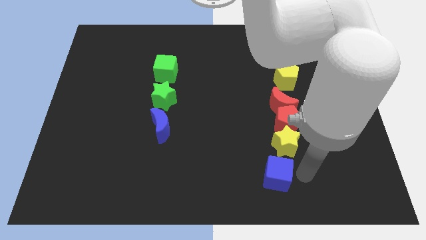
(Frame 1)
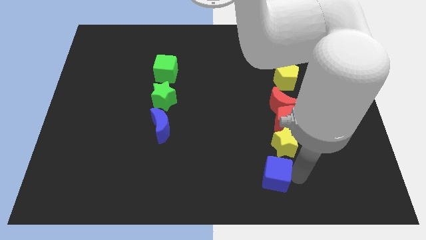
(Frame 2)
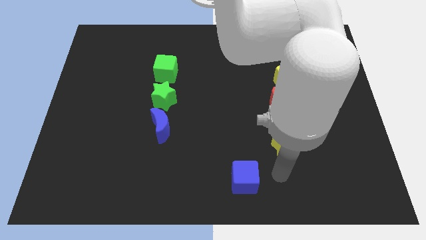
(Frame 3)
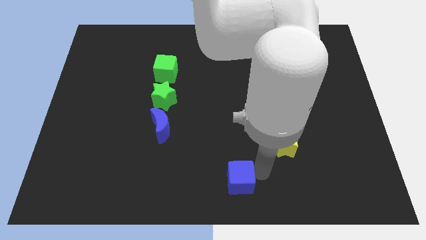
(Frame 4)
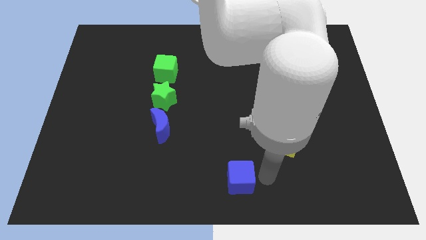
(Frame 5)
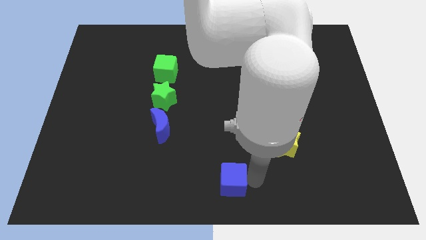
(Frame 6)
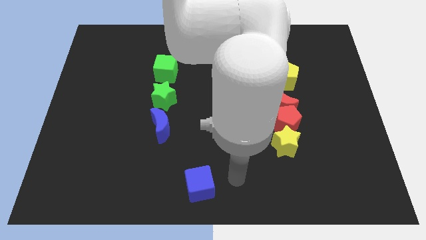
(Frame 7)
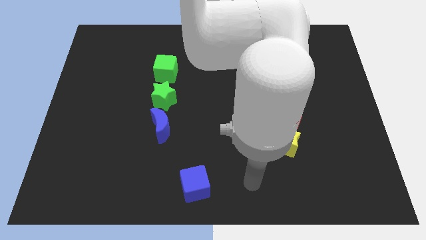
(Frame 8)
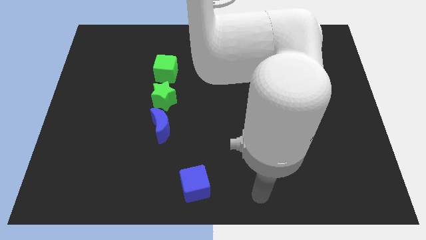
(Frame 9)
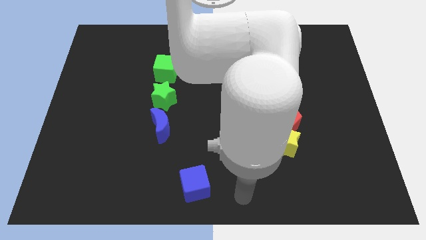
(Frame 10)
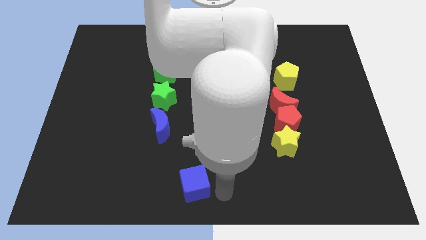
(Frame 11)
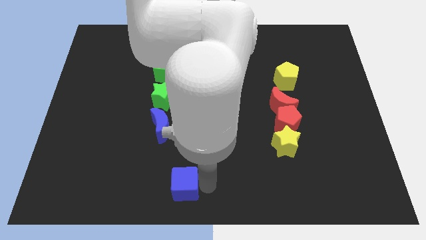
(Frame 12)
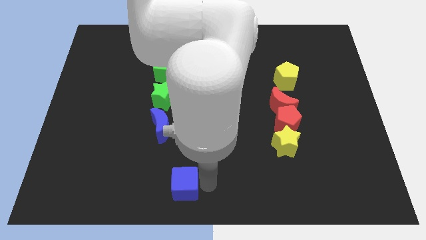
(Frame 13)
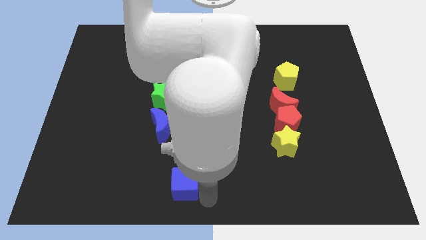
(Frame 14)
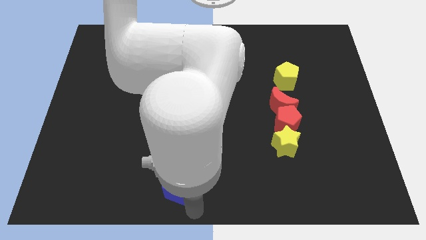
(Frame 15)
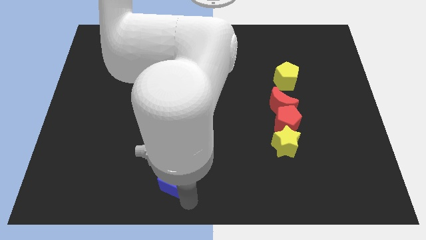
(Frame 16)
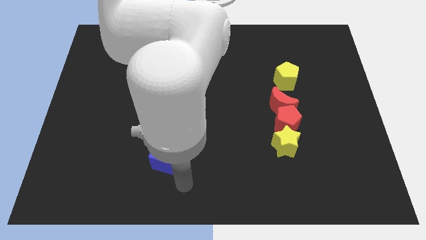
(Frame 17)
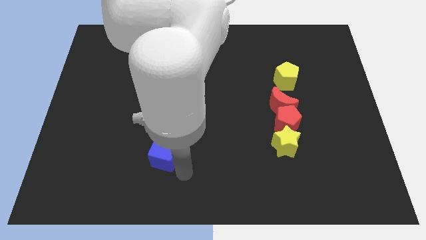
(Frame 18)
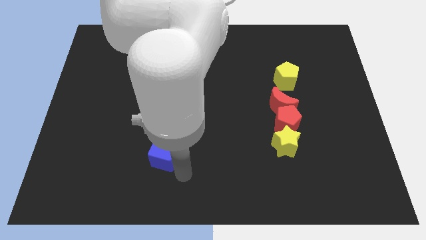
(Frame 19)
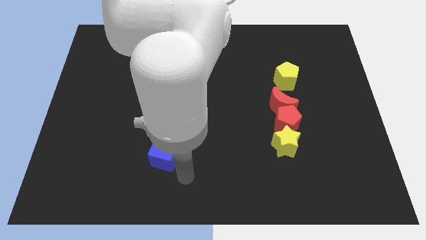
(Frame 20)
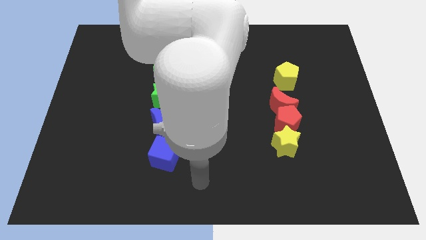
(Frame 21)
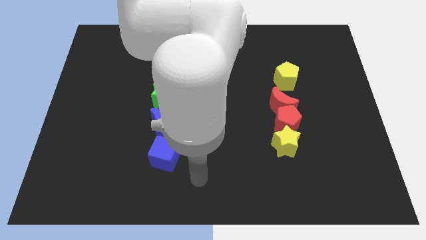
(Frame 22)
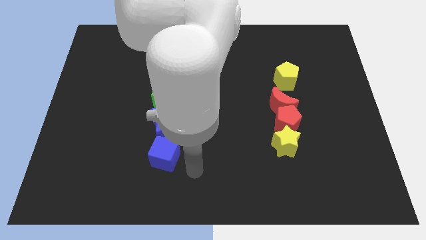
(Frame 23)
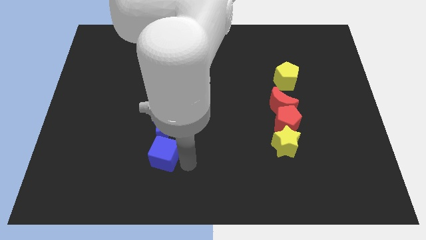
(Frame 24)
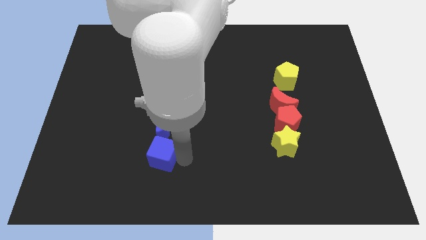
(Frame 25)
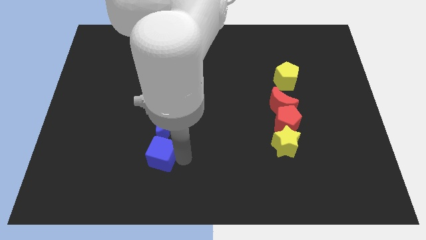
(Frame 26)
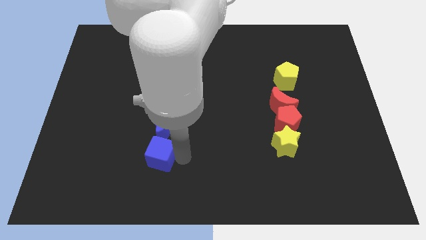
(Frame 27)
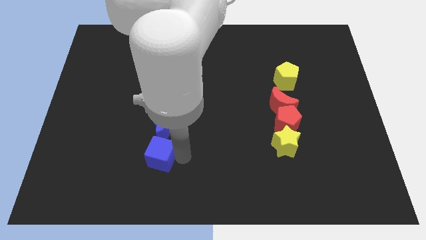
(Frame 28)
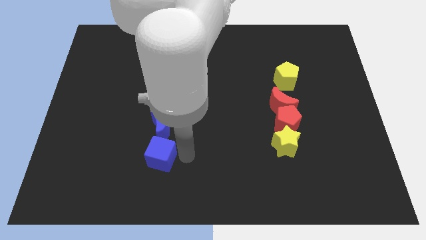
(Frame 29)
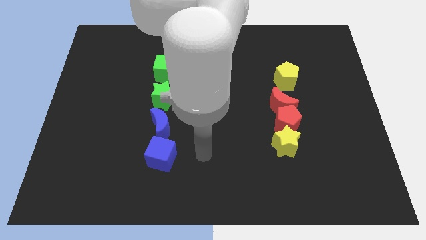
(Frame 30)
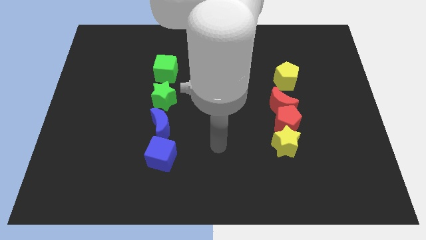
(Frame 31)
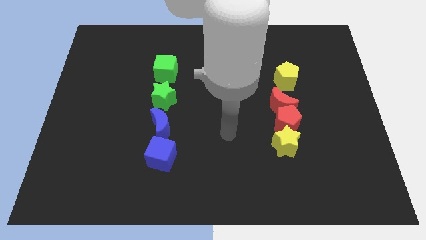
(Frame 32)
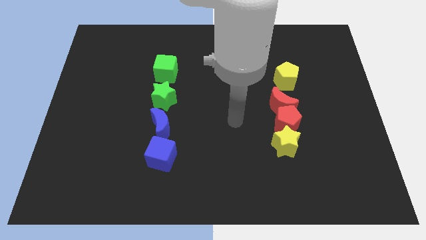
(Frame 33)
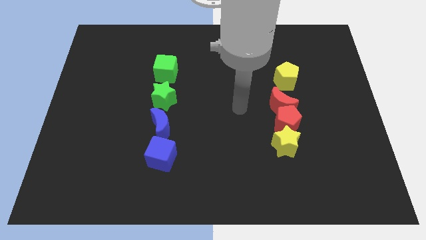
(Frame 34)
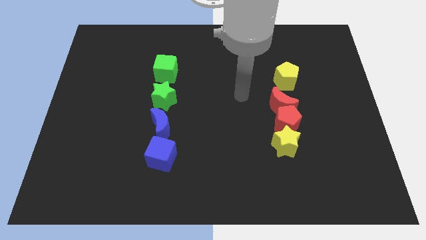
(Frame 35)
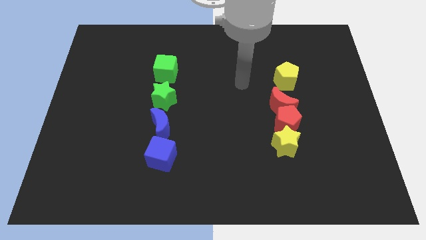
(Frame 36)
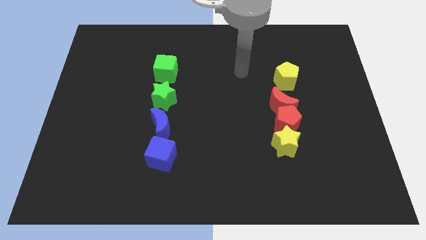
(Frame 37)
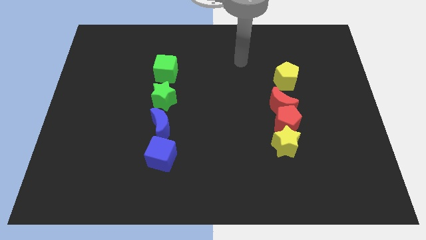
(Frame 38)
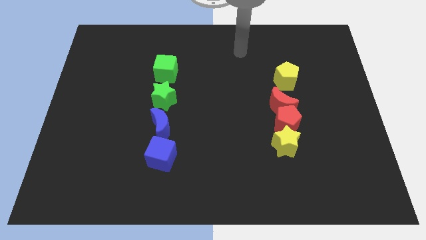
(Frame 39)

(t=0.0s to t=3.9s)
move blue cube to the bottom of blue crescent

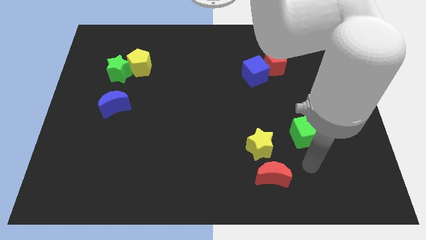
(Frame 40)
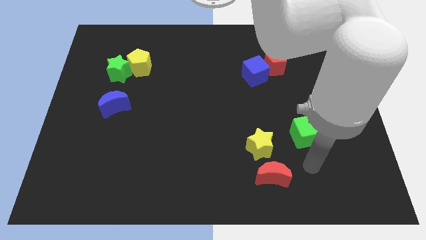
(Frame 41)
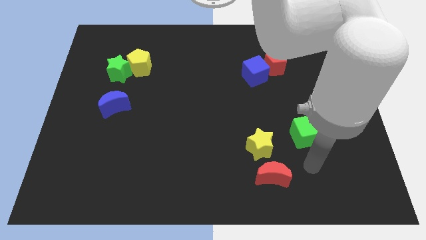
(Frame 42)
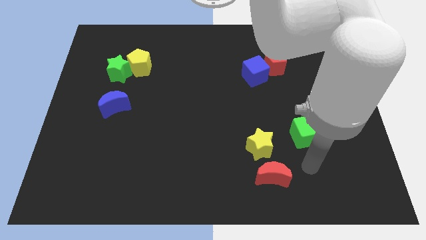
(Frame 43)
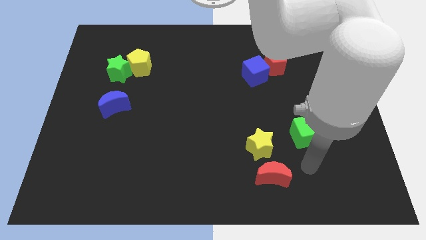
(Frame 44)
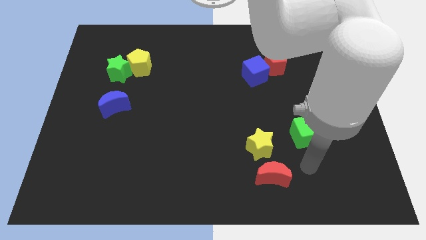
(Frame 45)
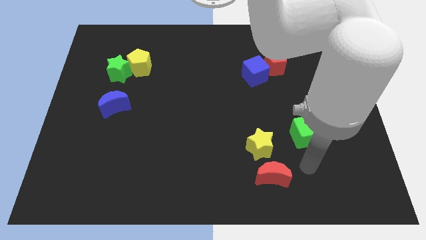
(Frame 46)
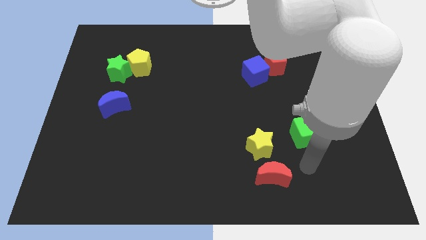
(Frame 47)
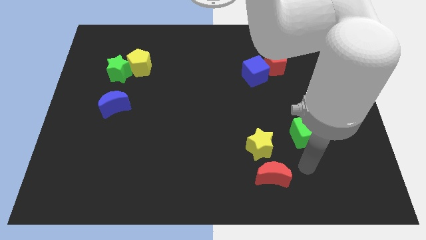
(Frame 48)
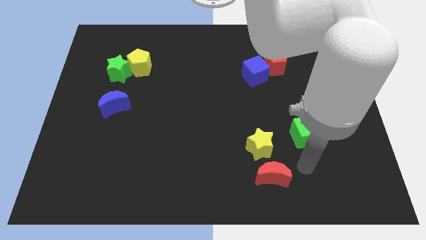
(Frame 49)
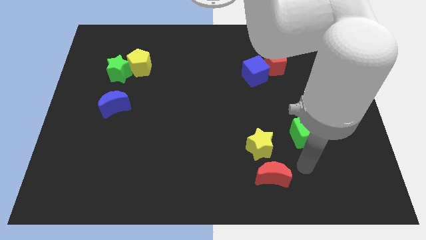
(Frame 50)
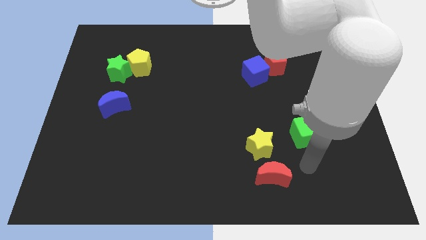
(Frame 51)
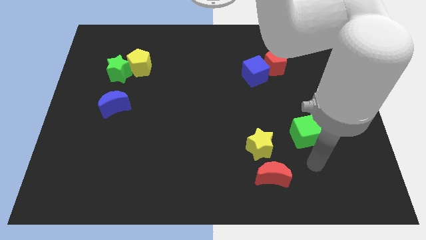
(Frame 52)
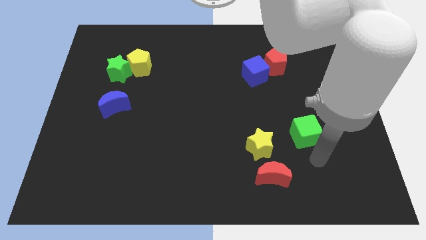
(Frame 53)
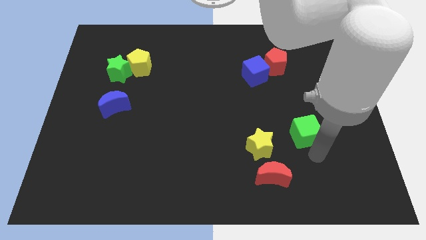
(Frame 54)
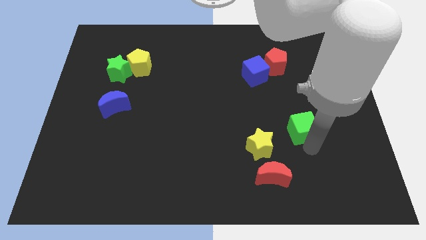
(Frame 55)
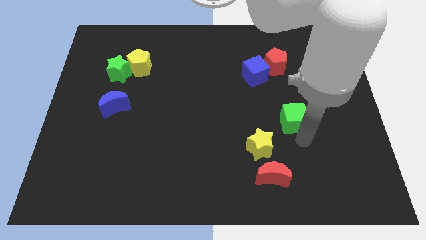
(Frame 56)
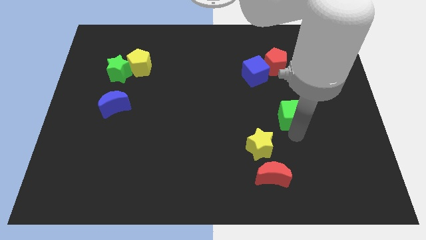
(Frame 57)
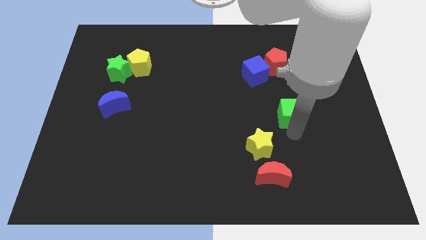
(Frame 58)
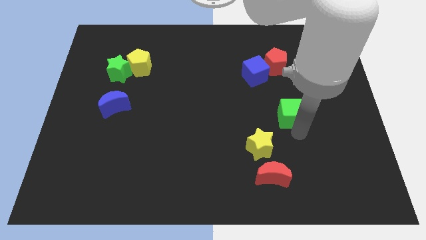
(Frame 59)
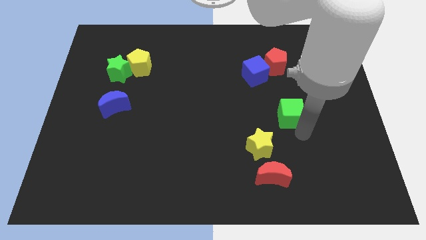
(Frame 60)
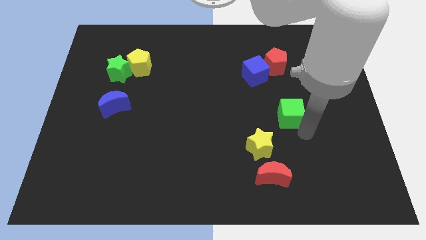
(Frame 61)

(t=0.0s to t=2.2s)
move the green cube up slightly

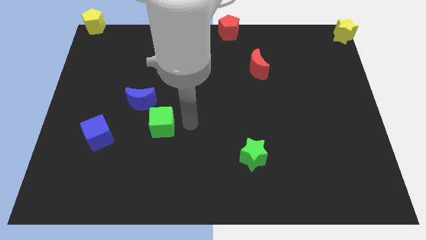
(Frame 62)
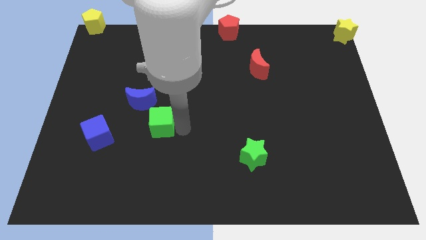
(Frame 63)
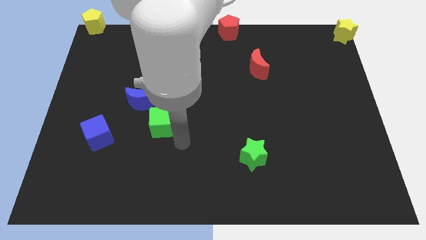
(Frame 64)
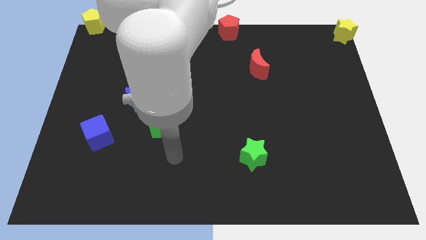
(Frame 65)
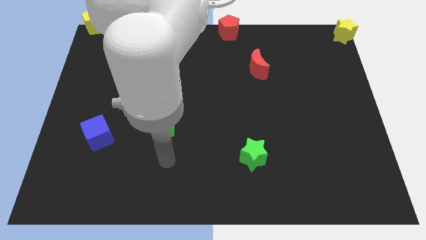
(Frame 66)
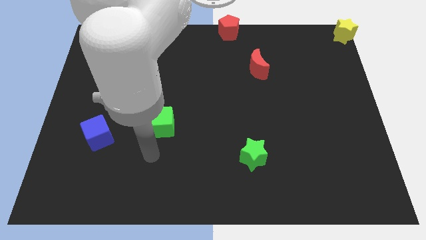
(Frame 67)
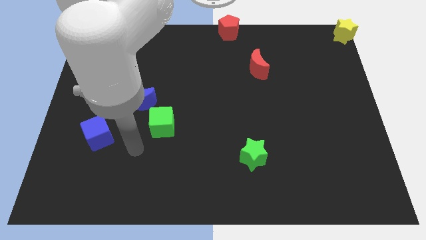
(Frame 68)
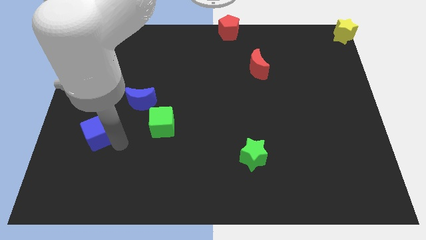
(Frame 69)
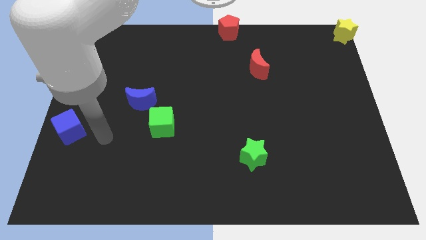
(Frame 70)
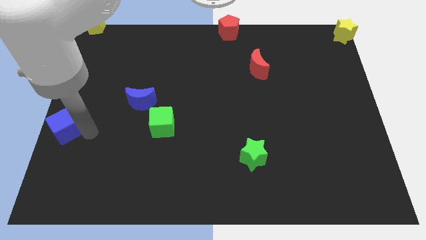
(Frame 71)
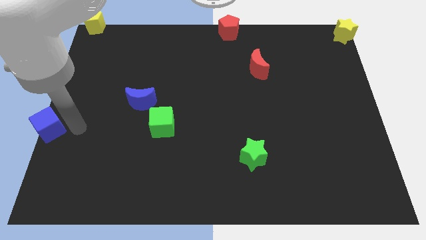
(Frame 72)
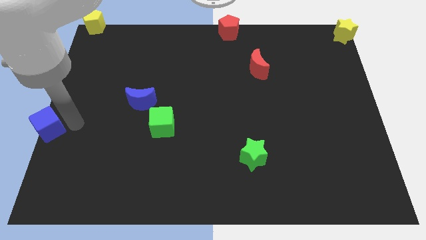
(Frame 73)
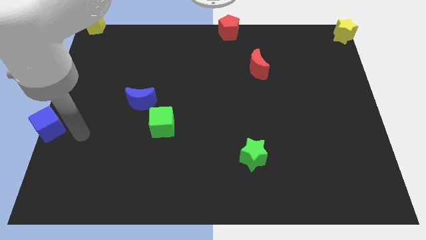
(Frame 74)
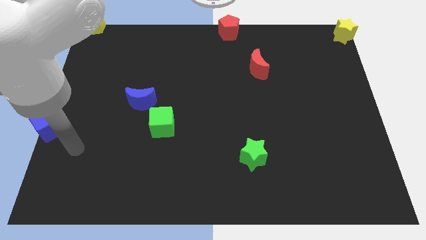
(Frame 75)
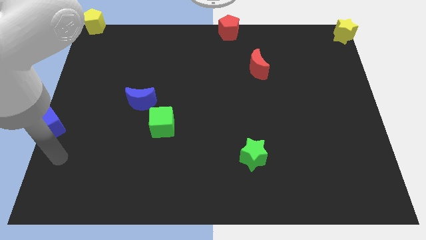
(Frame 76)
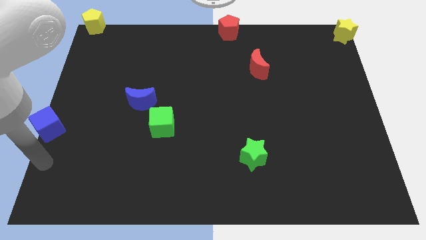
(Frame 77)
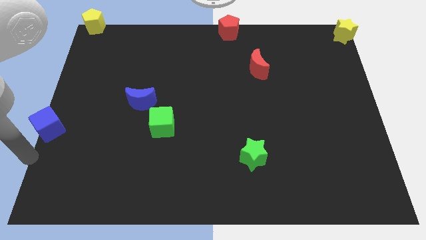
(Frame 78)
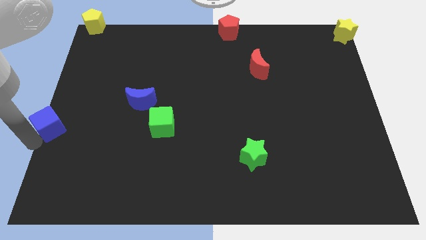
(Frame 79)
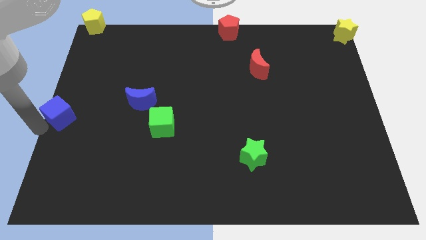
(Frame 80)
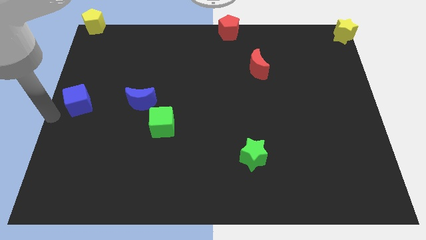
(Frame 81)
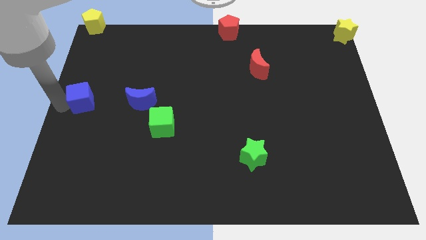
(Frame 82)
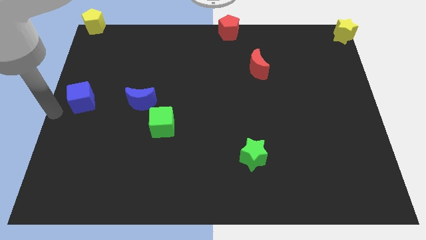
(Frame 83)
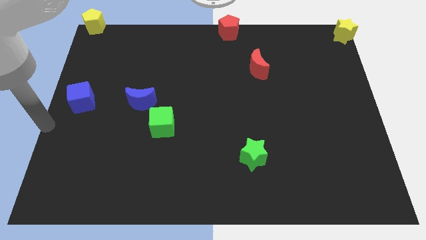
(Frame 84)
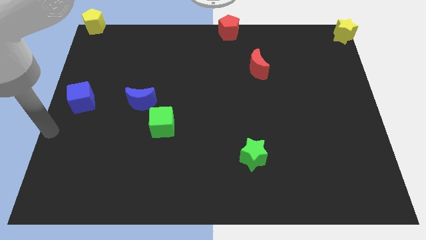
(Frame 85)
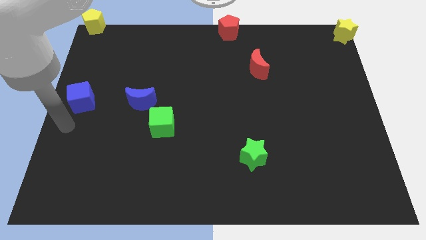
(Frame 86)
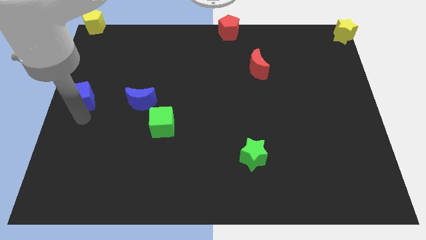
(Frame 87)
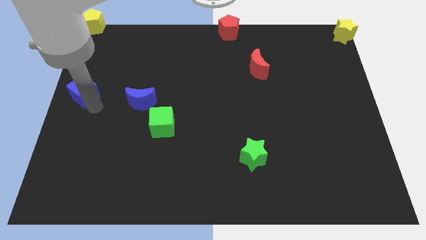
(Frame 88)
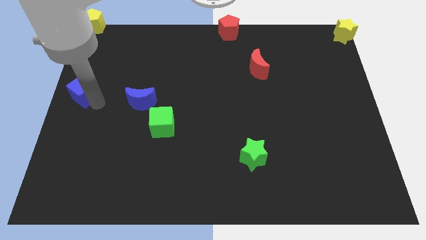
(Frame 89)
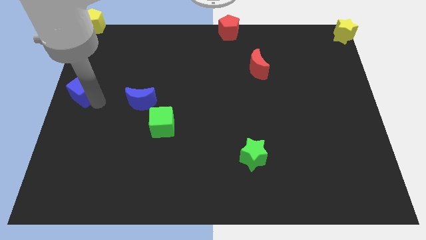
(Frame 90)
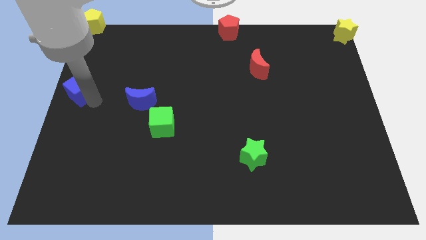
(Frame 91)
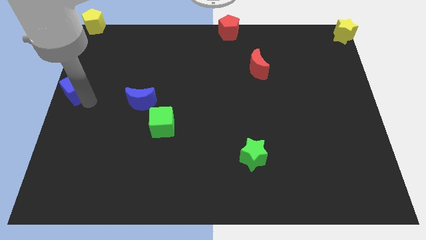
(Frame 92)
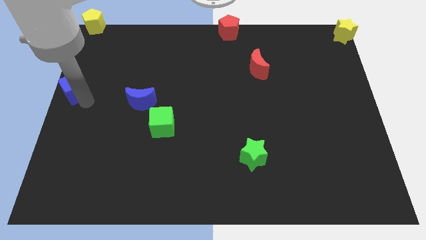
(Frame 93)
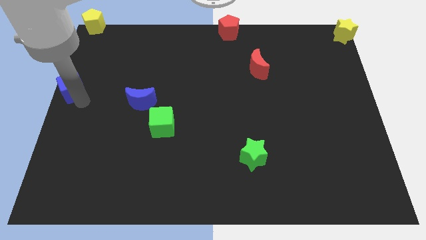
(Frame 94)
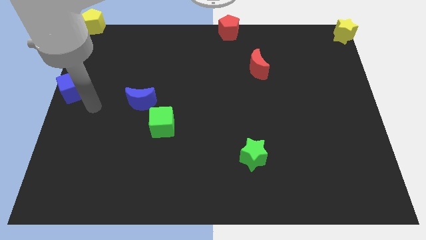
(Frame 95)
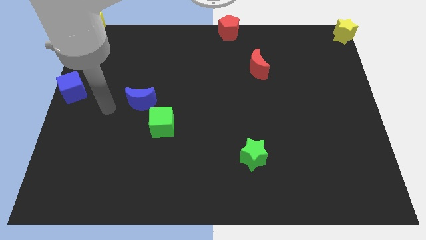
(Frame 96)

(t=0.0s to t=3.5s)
move the blue cube to the middle left of the board
